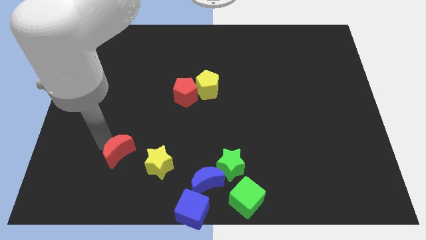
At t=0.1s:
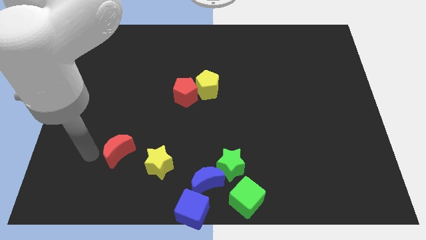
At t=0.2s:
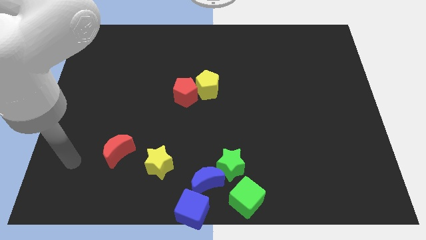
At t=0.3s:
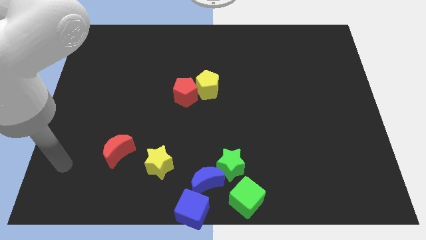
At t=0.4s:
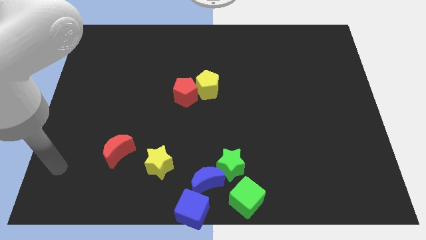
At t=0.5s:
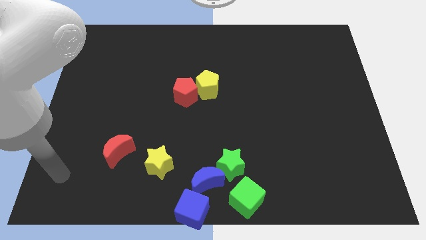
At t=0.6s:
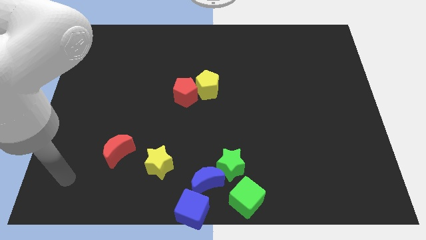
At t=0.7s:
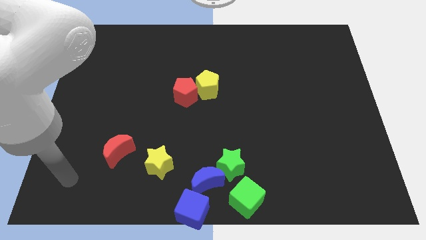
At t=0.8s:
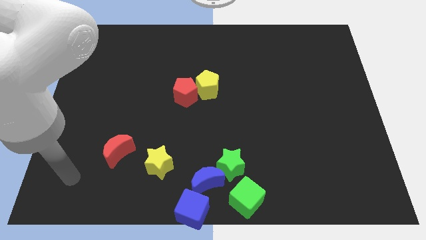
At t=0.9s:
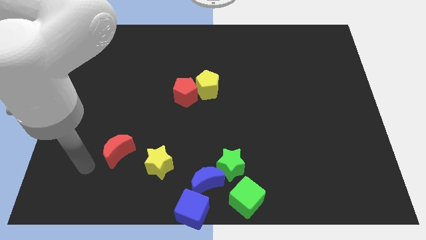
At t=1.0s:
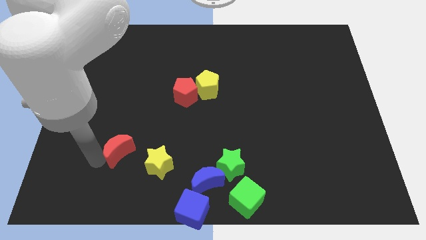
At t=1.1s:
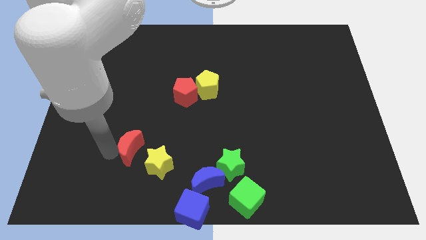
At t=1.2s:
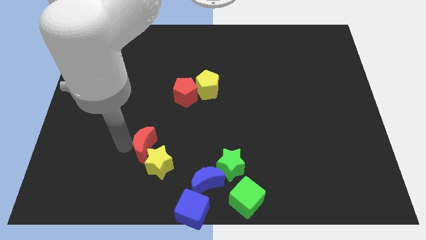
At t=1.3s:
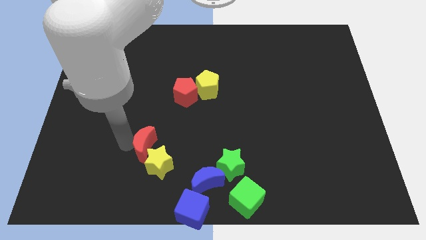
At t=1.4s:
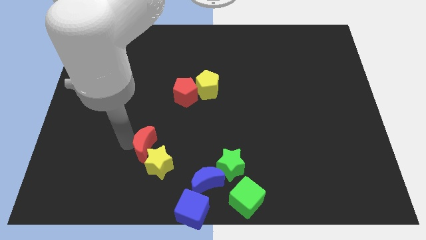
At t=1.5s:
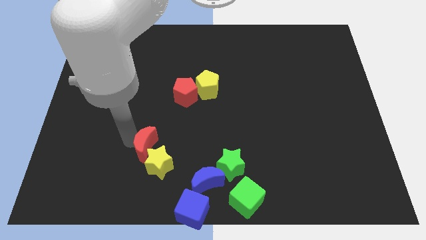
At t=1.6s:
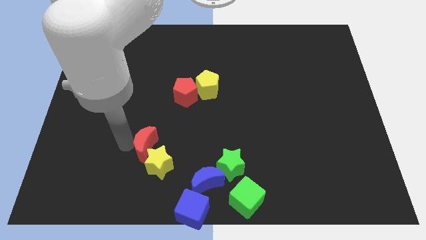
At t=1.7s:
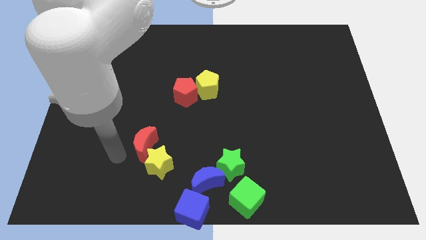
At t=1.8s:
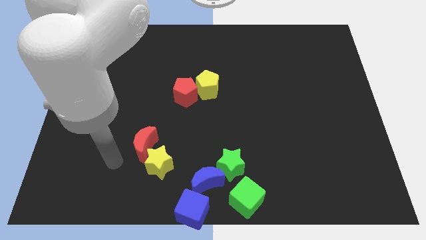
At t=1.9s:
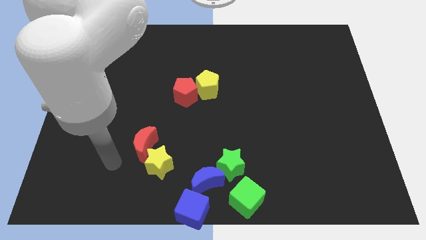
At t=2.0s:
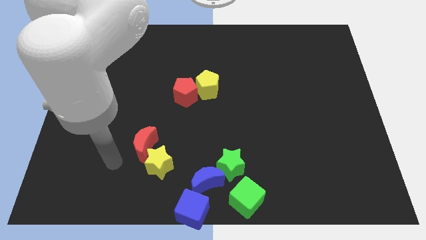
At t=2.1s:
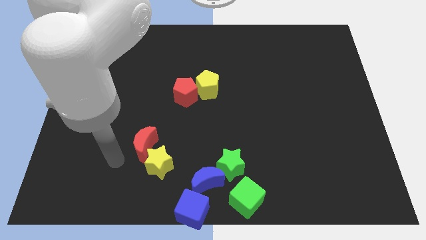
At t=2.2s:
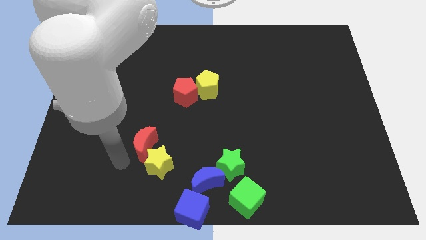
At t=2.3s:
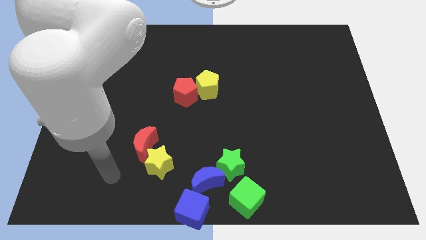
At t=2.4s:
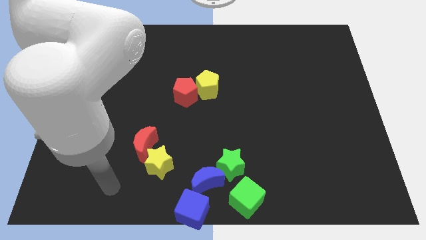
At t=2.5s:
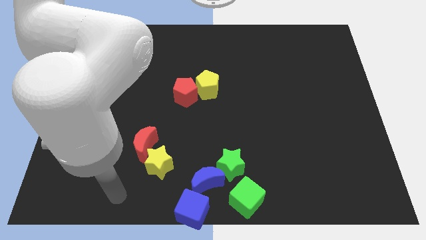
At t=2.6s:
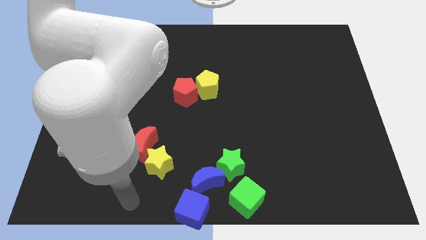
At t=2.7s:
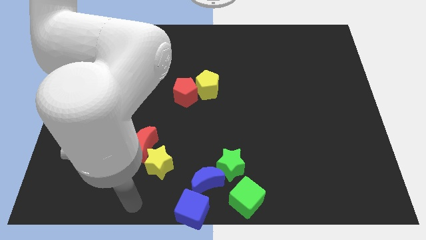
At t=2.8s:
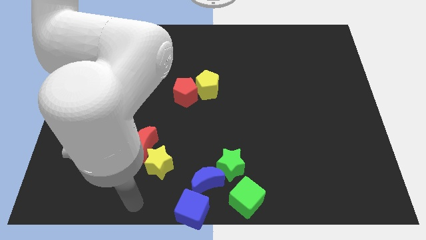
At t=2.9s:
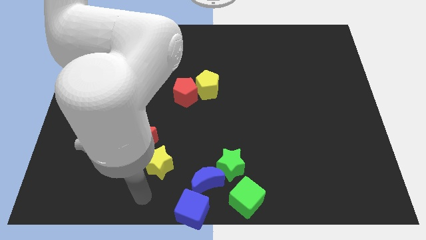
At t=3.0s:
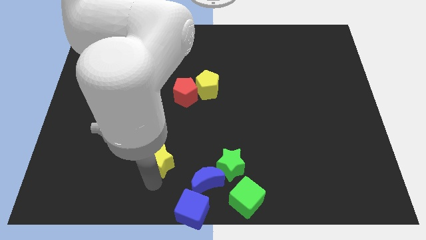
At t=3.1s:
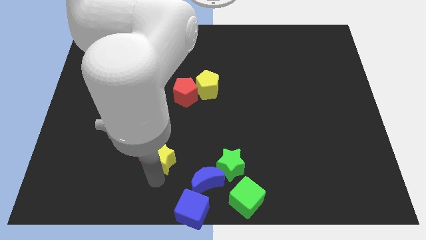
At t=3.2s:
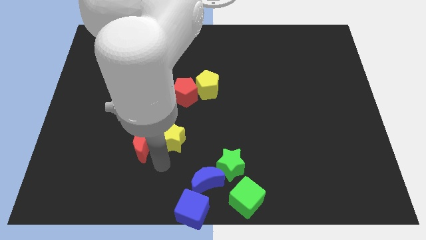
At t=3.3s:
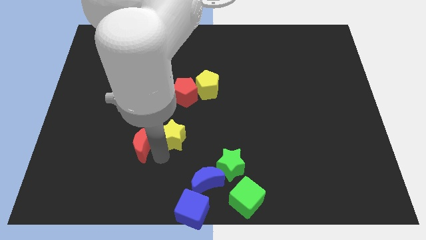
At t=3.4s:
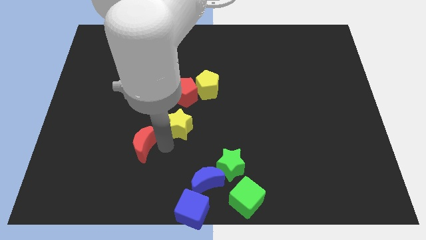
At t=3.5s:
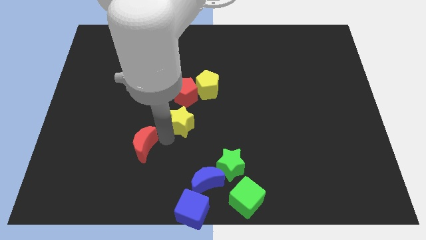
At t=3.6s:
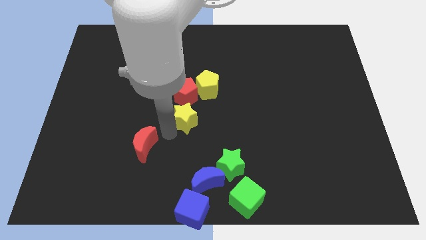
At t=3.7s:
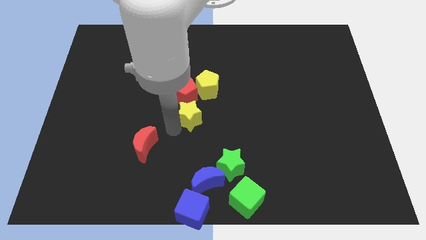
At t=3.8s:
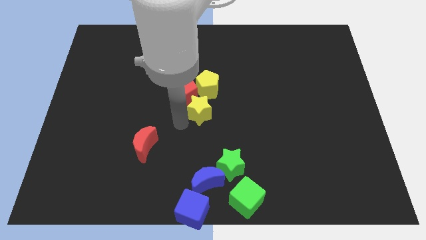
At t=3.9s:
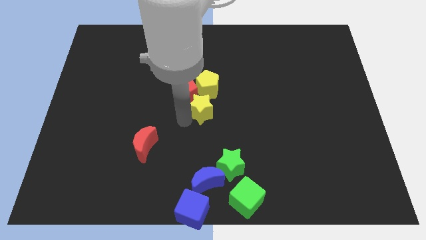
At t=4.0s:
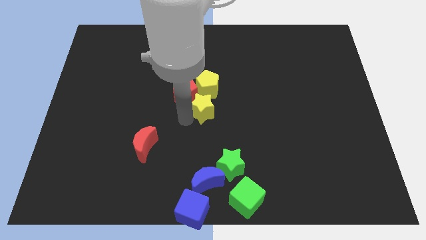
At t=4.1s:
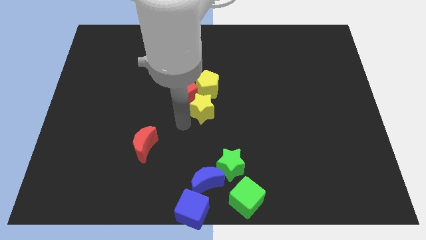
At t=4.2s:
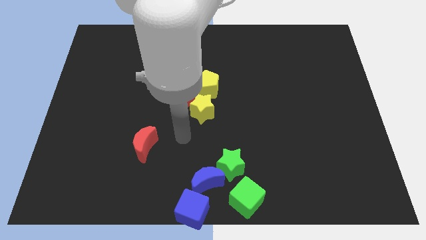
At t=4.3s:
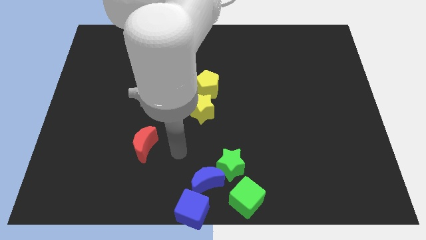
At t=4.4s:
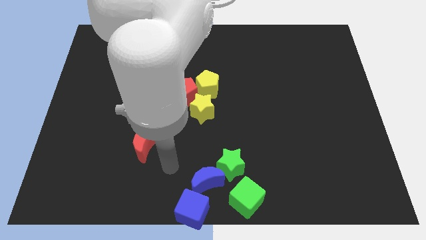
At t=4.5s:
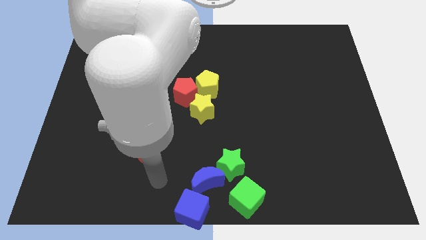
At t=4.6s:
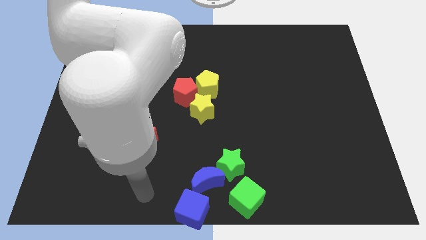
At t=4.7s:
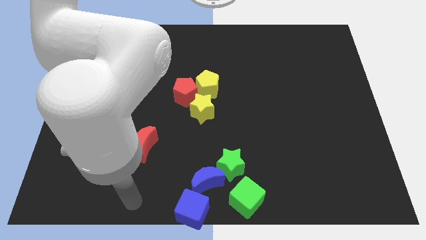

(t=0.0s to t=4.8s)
place the yellow star below to the yellow pentagon

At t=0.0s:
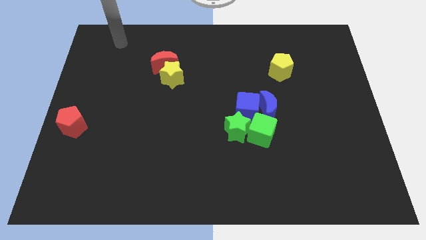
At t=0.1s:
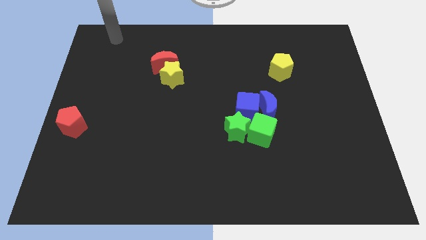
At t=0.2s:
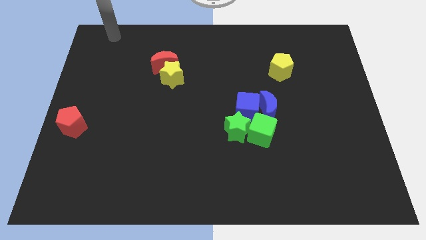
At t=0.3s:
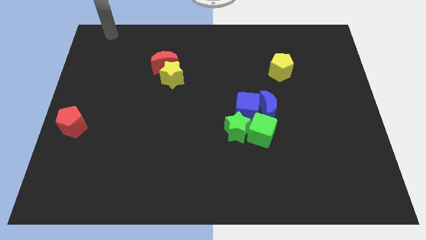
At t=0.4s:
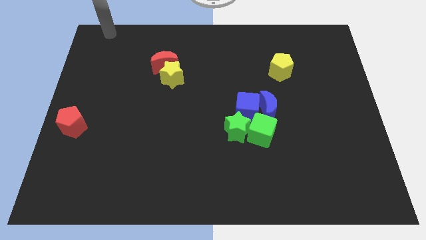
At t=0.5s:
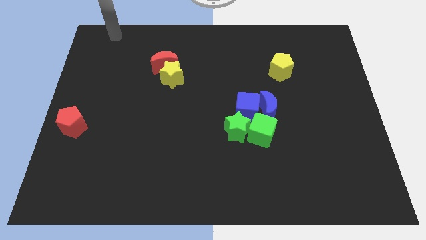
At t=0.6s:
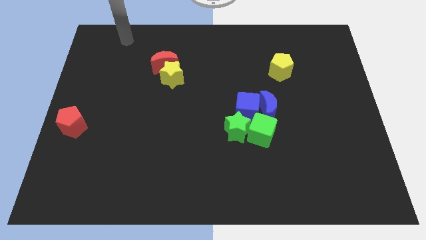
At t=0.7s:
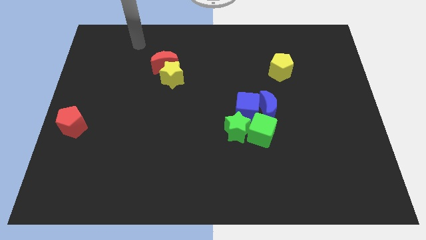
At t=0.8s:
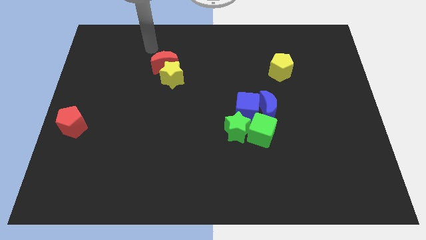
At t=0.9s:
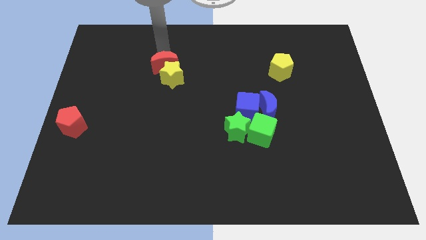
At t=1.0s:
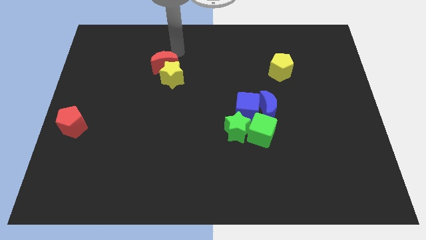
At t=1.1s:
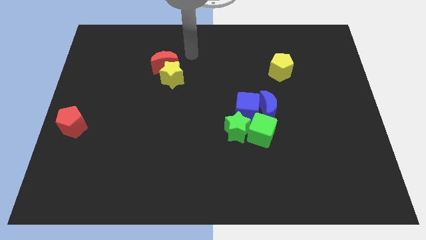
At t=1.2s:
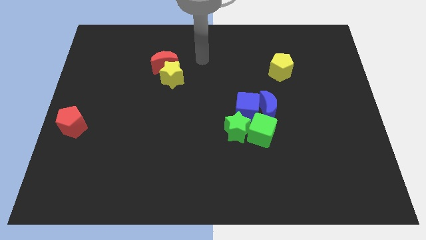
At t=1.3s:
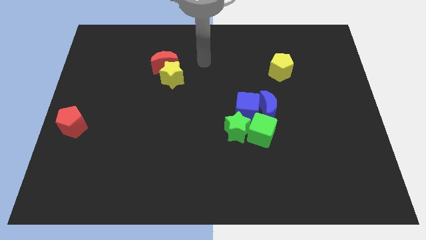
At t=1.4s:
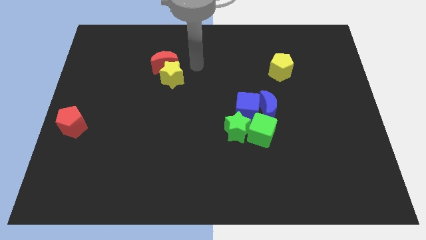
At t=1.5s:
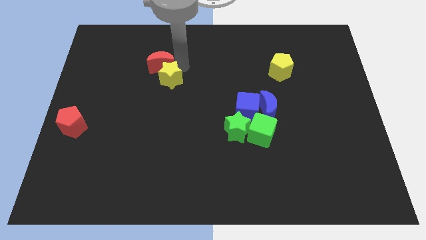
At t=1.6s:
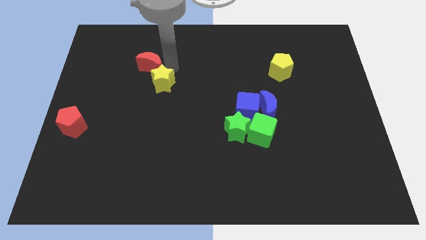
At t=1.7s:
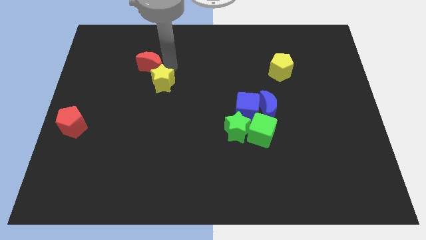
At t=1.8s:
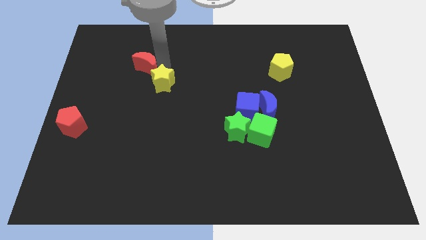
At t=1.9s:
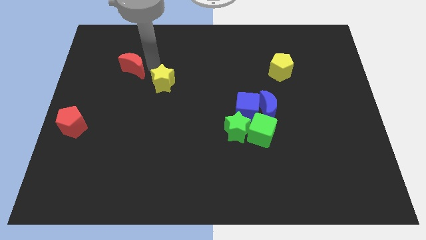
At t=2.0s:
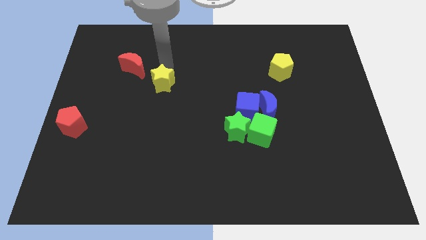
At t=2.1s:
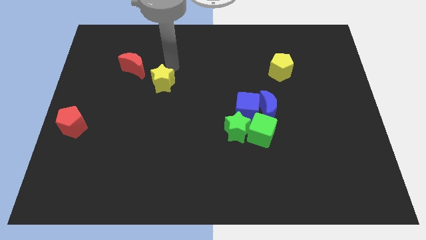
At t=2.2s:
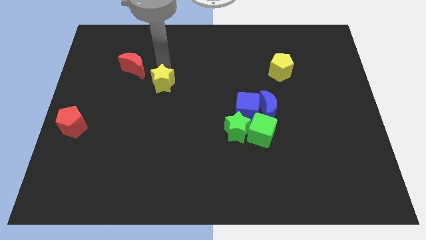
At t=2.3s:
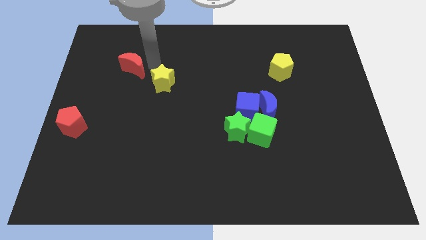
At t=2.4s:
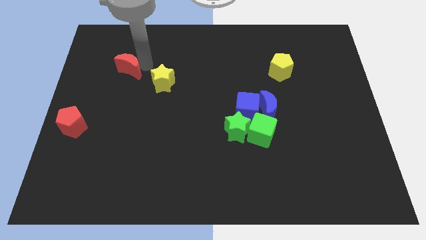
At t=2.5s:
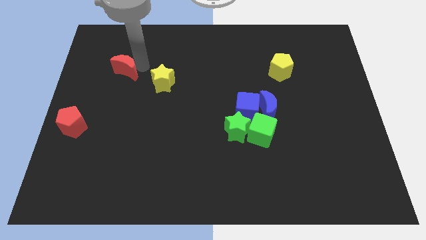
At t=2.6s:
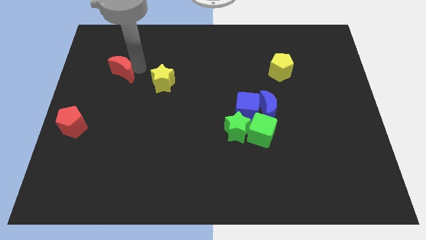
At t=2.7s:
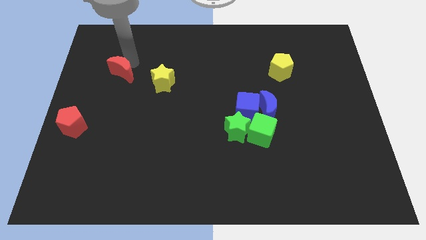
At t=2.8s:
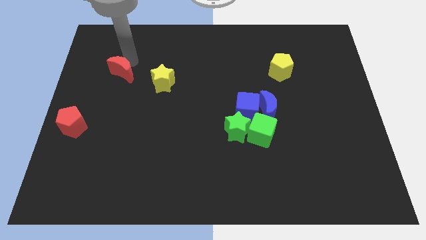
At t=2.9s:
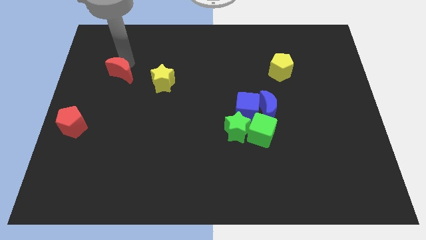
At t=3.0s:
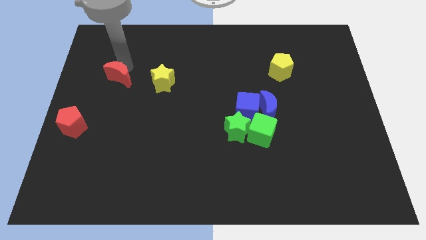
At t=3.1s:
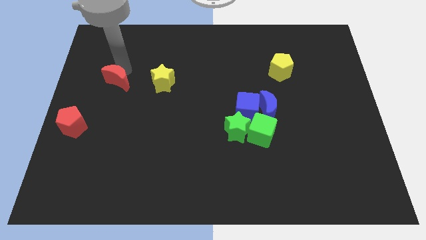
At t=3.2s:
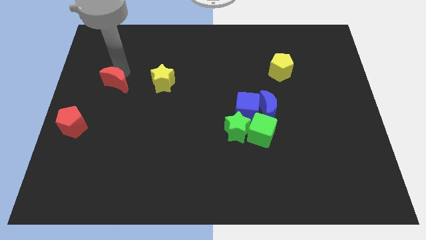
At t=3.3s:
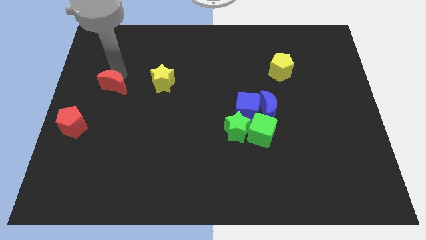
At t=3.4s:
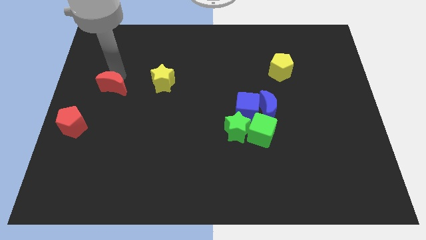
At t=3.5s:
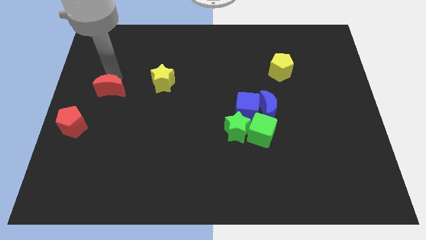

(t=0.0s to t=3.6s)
push the red moon slightly downwards

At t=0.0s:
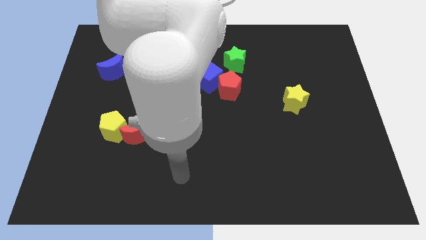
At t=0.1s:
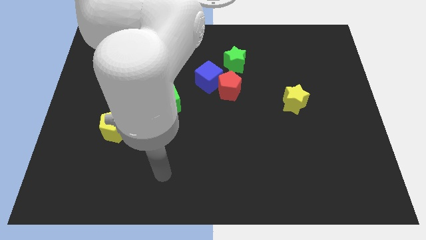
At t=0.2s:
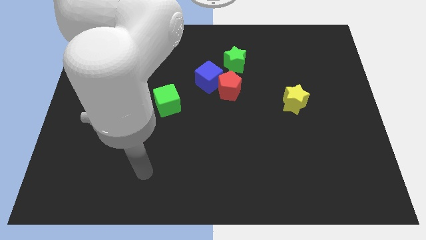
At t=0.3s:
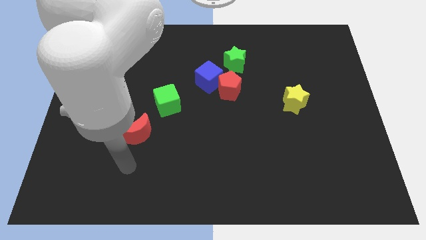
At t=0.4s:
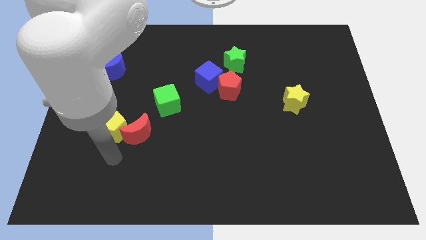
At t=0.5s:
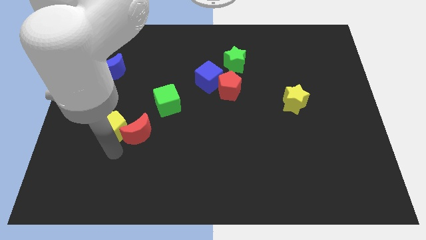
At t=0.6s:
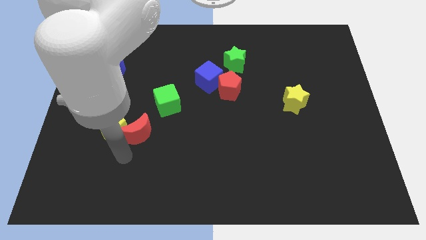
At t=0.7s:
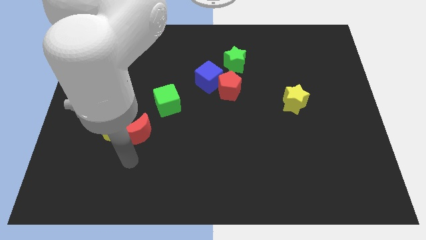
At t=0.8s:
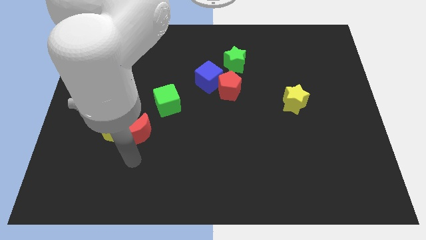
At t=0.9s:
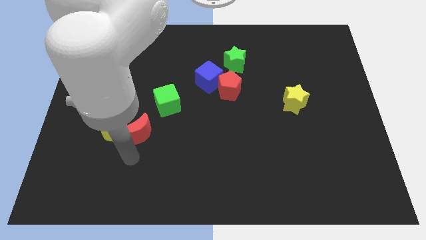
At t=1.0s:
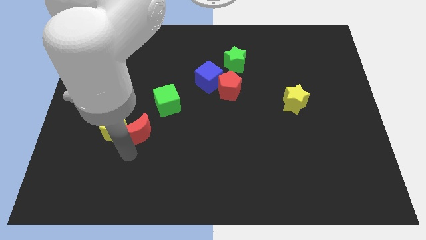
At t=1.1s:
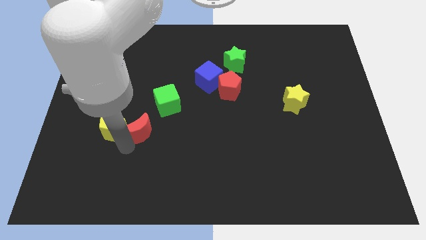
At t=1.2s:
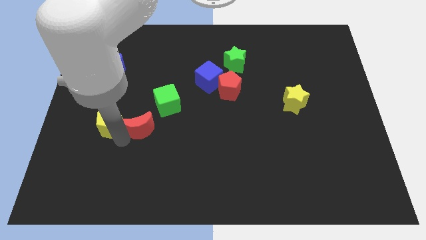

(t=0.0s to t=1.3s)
touch the bottom of red crescent
